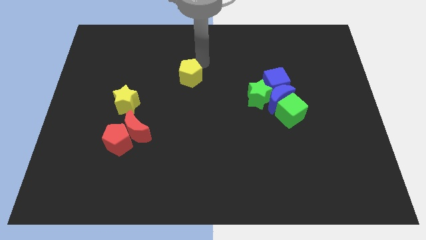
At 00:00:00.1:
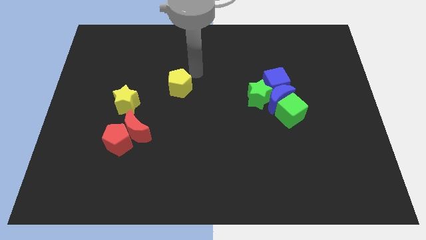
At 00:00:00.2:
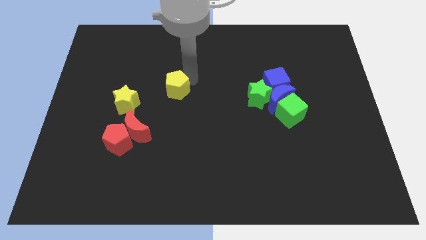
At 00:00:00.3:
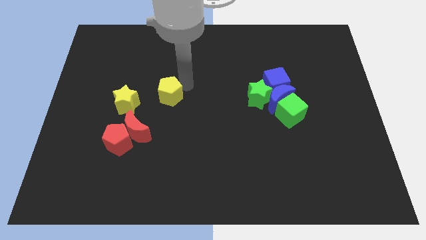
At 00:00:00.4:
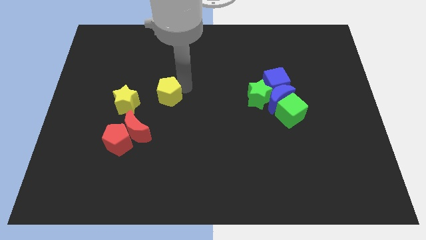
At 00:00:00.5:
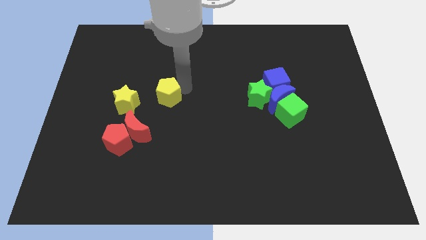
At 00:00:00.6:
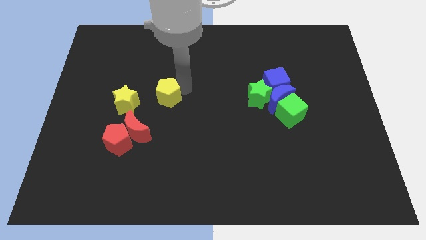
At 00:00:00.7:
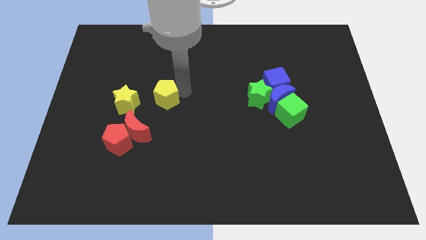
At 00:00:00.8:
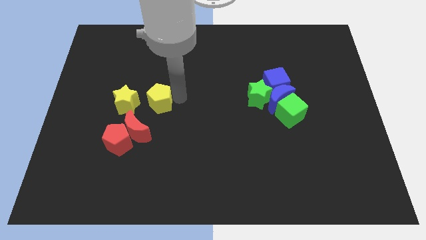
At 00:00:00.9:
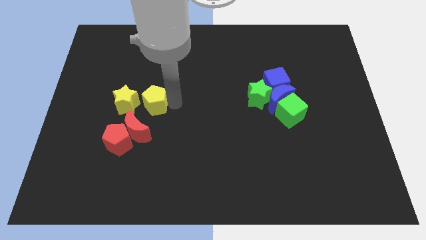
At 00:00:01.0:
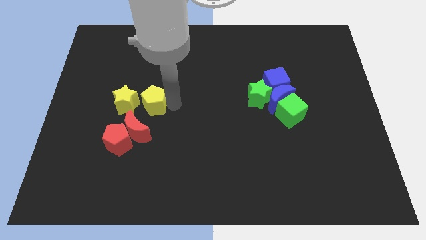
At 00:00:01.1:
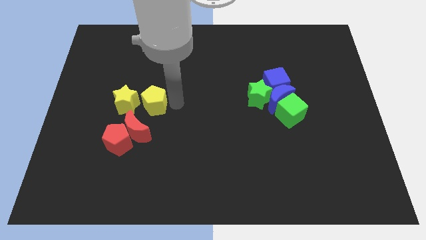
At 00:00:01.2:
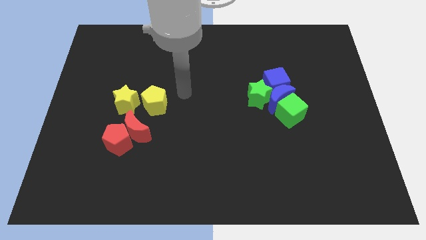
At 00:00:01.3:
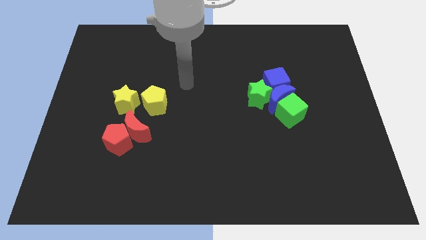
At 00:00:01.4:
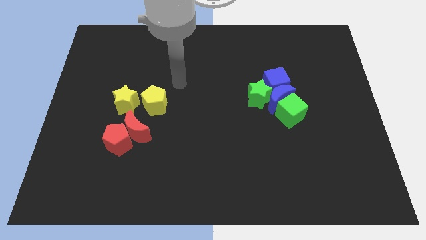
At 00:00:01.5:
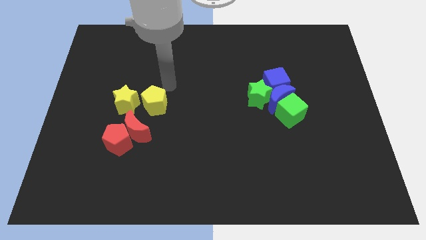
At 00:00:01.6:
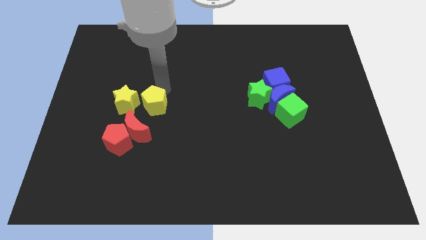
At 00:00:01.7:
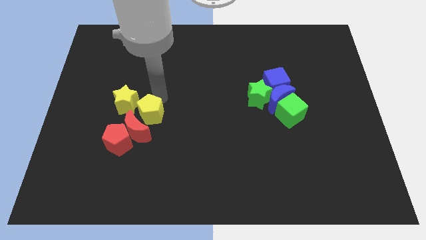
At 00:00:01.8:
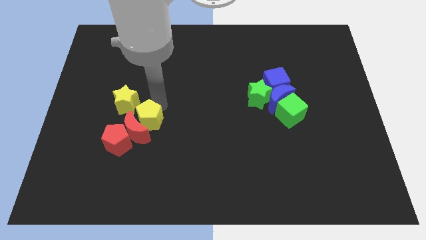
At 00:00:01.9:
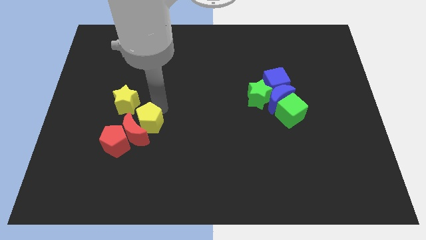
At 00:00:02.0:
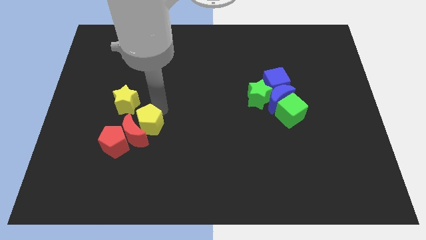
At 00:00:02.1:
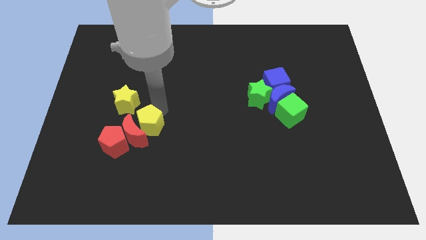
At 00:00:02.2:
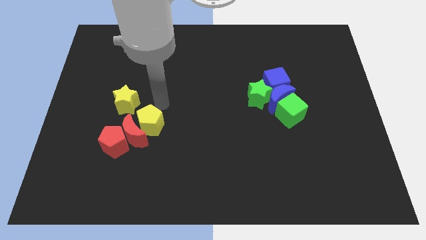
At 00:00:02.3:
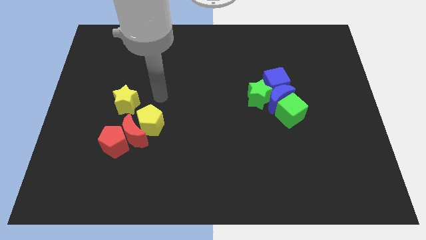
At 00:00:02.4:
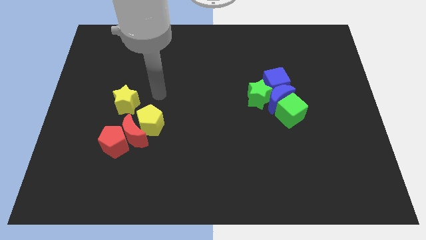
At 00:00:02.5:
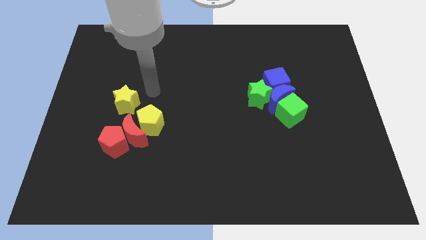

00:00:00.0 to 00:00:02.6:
push the yellow pentagon into red crescent

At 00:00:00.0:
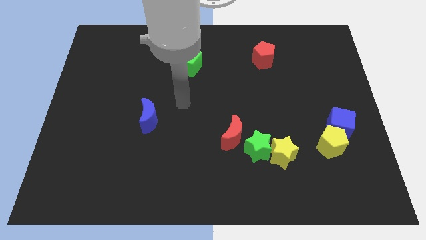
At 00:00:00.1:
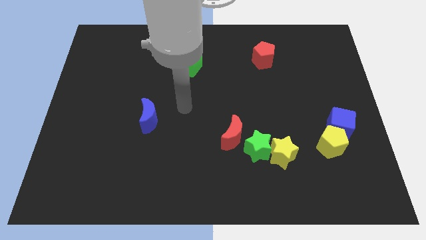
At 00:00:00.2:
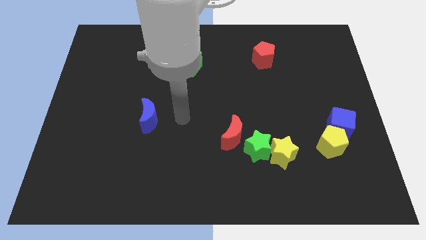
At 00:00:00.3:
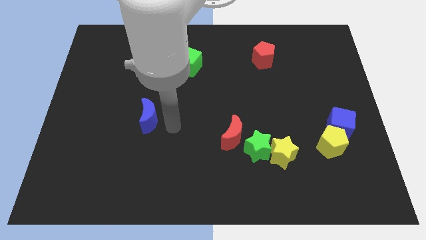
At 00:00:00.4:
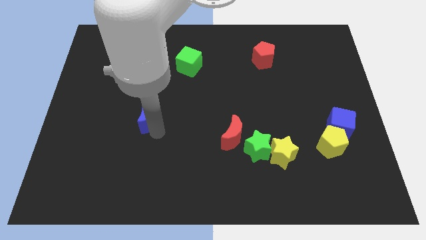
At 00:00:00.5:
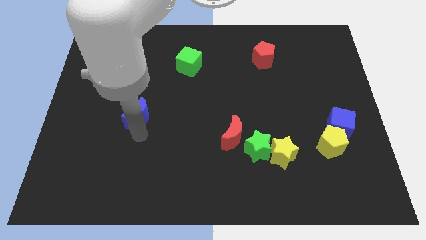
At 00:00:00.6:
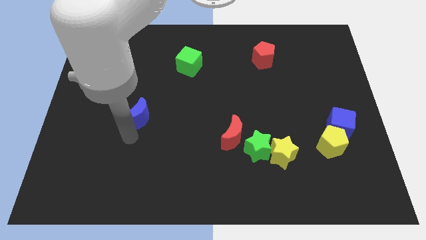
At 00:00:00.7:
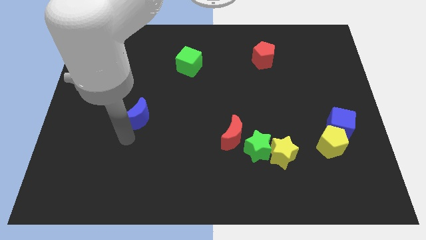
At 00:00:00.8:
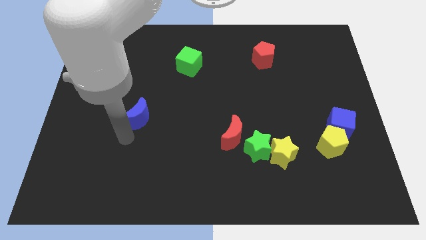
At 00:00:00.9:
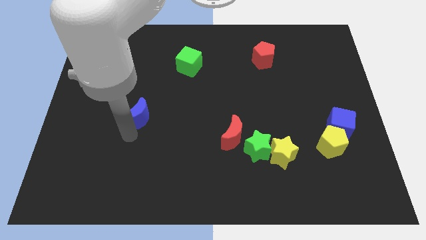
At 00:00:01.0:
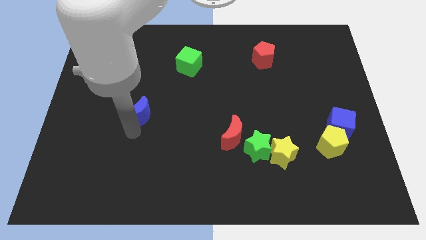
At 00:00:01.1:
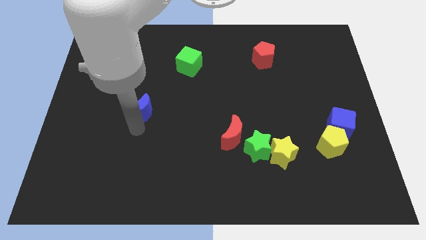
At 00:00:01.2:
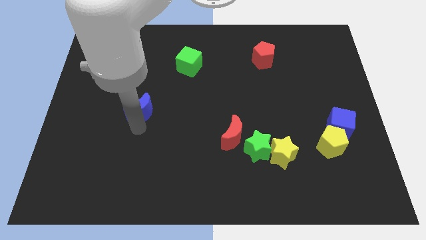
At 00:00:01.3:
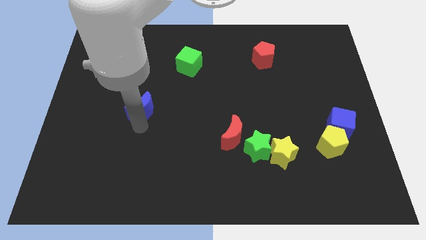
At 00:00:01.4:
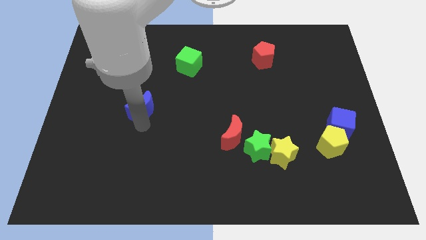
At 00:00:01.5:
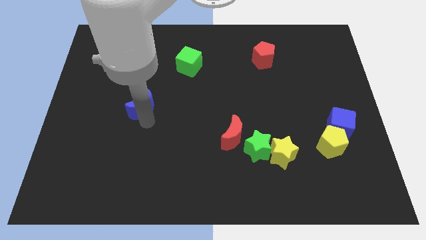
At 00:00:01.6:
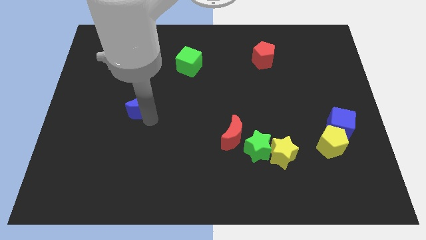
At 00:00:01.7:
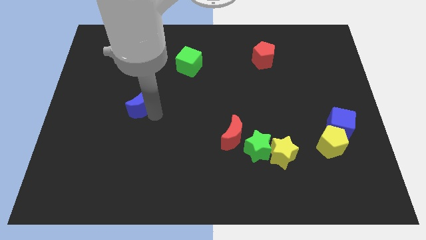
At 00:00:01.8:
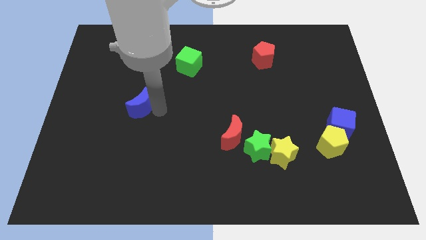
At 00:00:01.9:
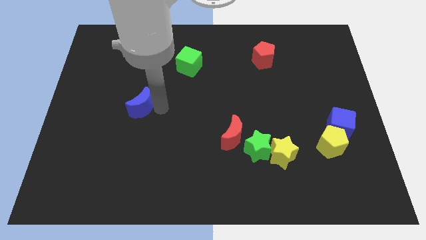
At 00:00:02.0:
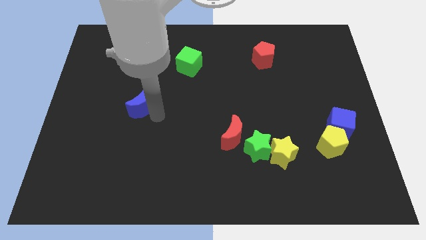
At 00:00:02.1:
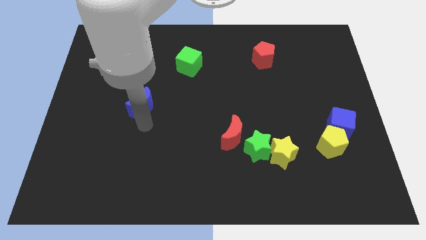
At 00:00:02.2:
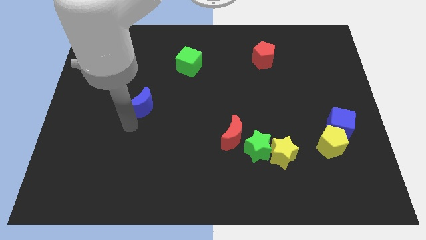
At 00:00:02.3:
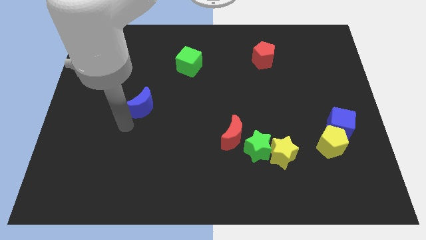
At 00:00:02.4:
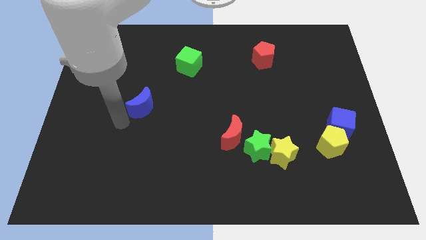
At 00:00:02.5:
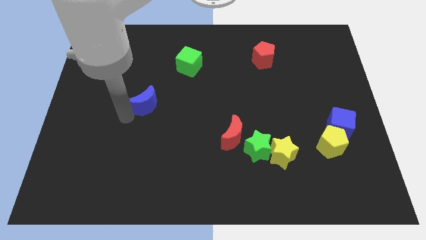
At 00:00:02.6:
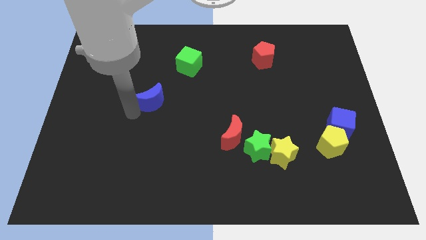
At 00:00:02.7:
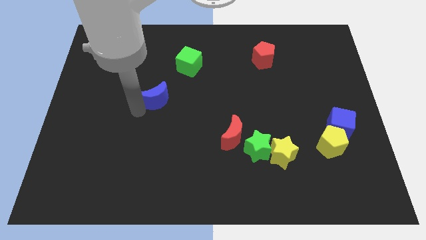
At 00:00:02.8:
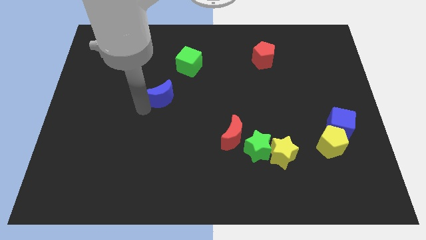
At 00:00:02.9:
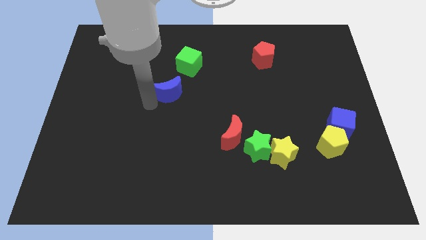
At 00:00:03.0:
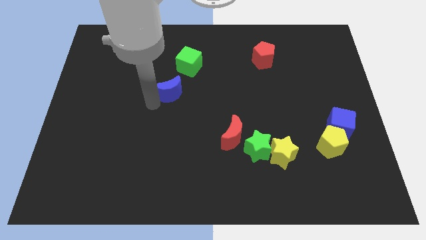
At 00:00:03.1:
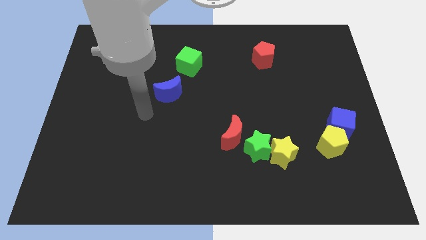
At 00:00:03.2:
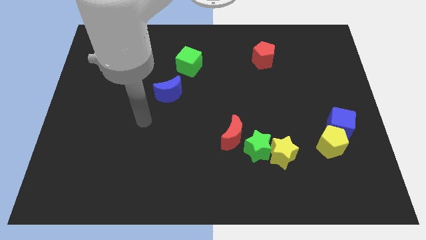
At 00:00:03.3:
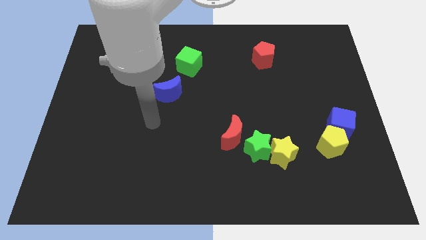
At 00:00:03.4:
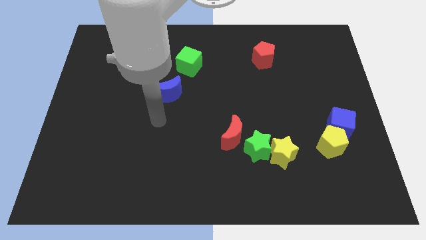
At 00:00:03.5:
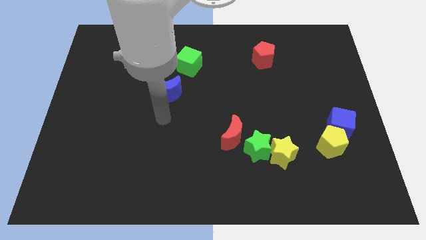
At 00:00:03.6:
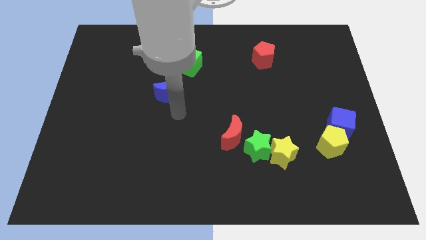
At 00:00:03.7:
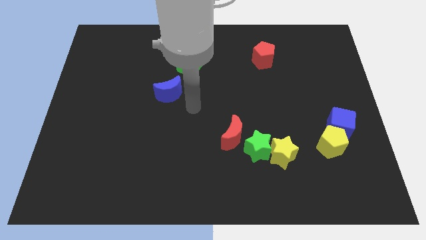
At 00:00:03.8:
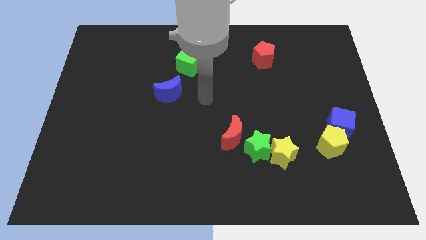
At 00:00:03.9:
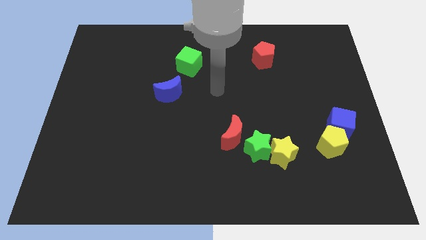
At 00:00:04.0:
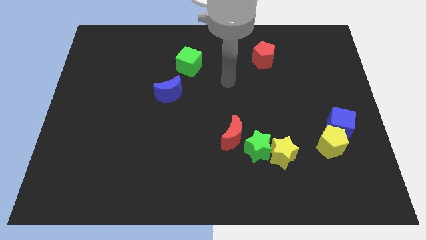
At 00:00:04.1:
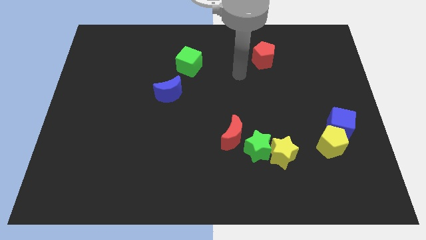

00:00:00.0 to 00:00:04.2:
move the blue moon close to the green cube

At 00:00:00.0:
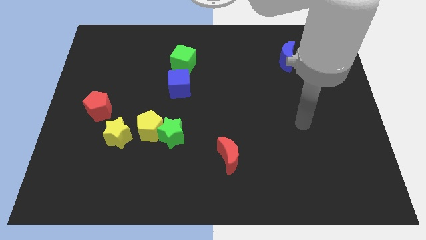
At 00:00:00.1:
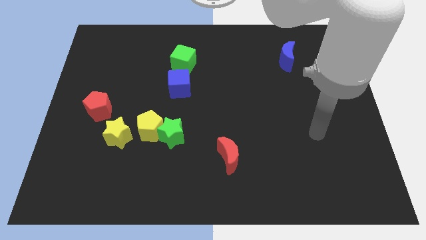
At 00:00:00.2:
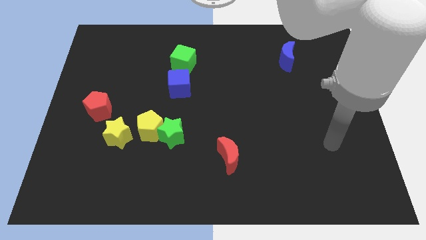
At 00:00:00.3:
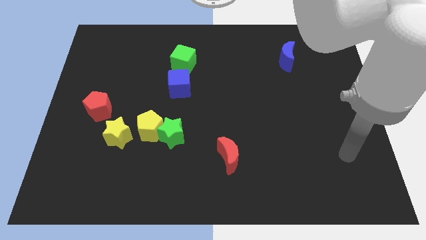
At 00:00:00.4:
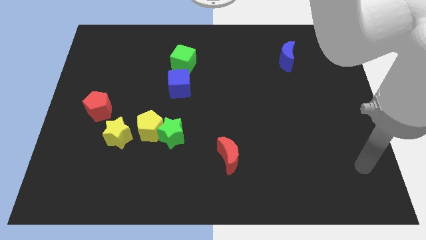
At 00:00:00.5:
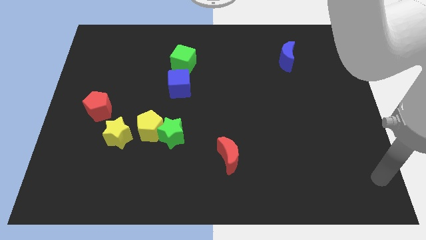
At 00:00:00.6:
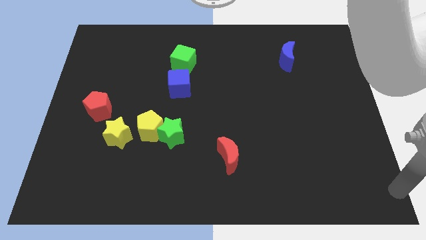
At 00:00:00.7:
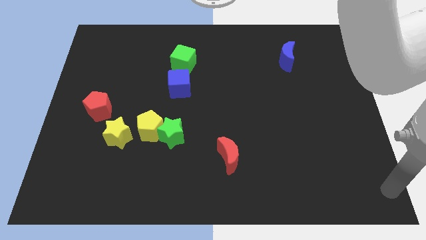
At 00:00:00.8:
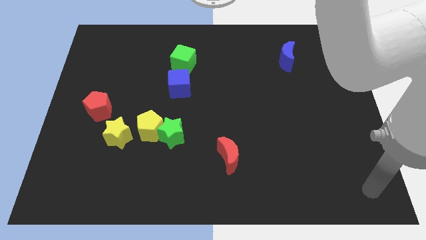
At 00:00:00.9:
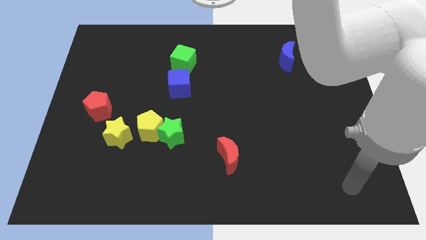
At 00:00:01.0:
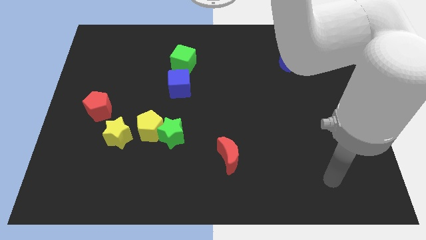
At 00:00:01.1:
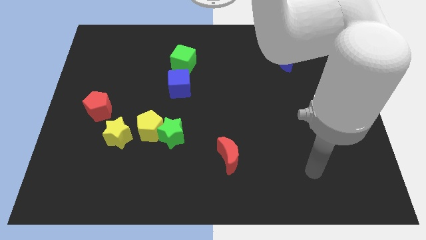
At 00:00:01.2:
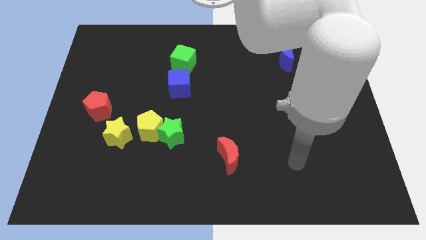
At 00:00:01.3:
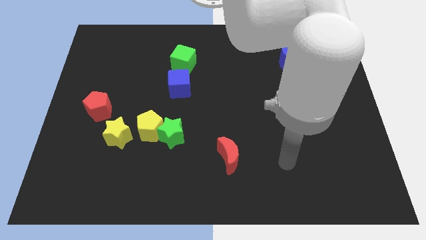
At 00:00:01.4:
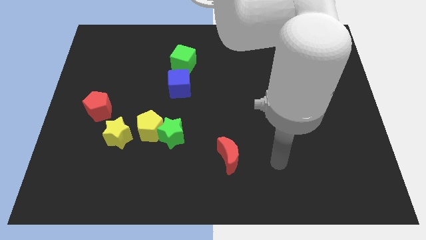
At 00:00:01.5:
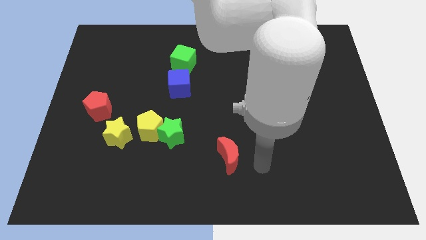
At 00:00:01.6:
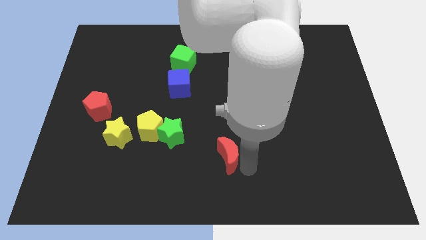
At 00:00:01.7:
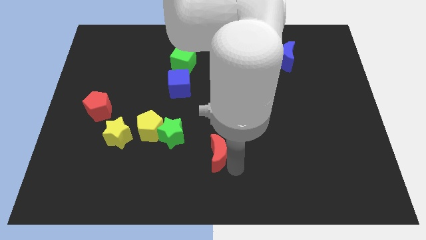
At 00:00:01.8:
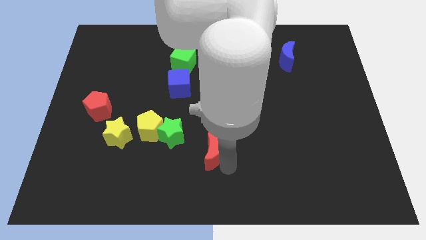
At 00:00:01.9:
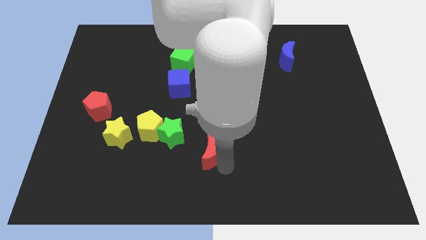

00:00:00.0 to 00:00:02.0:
move the red moon slightly to the left
